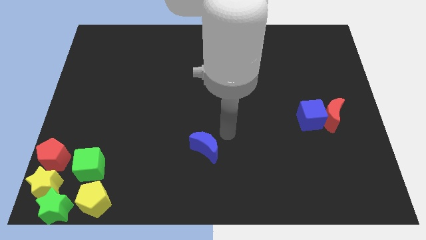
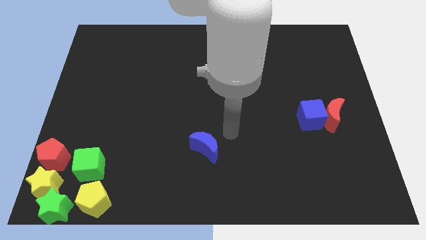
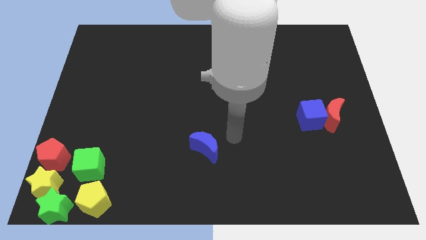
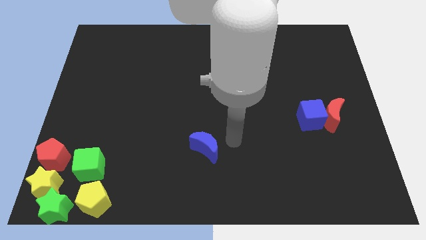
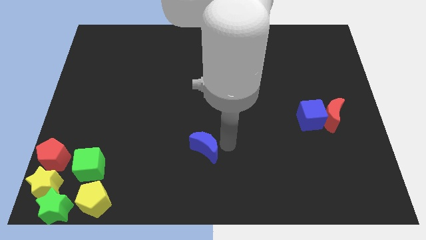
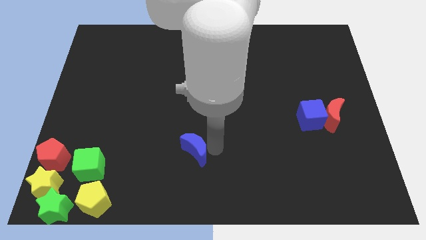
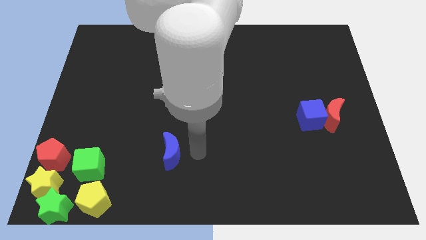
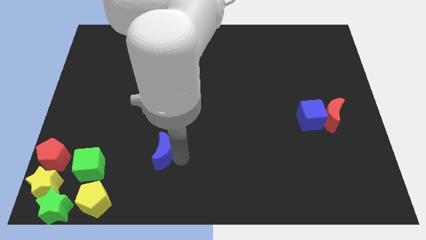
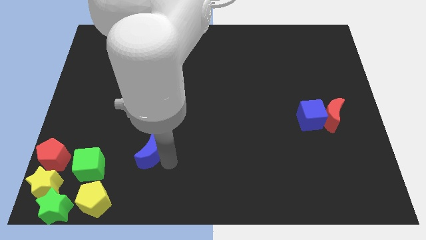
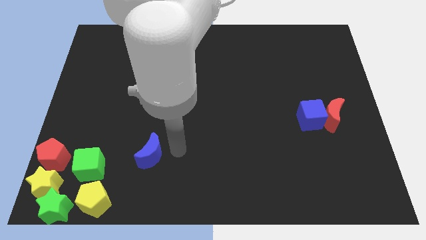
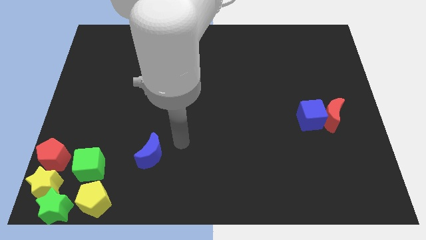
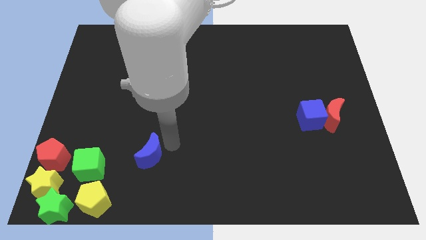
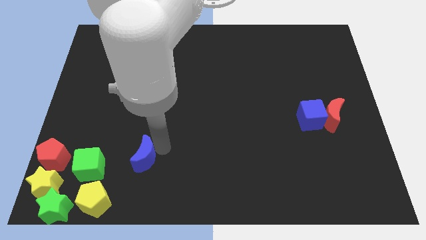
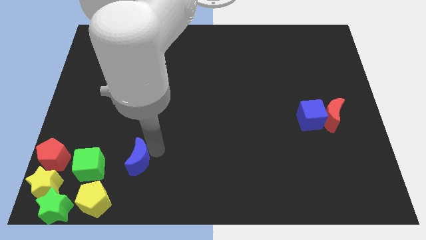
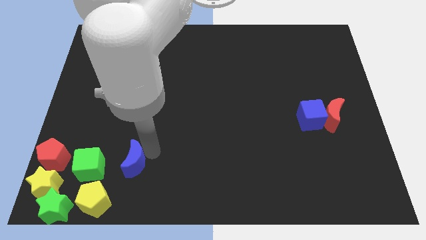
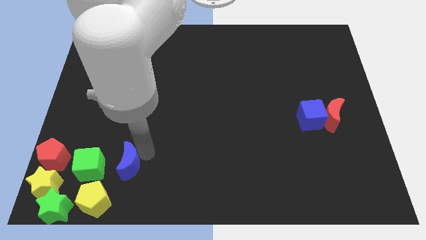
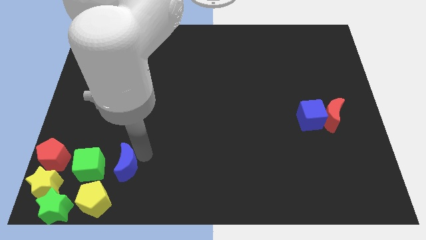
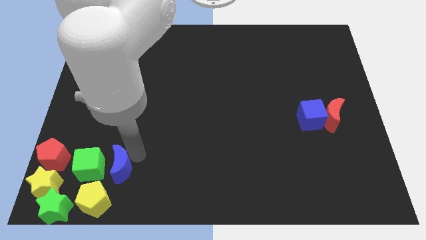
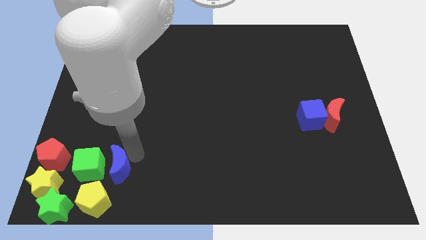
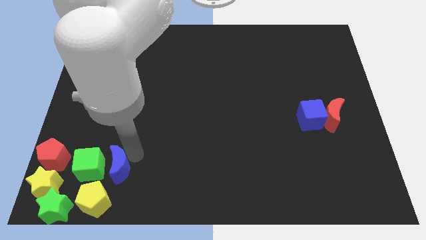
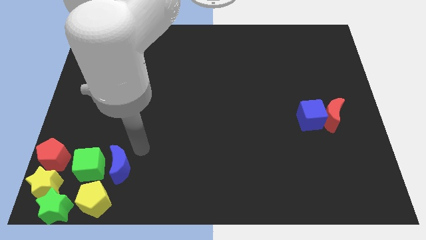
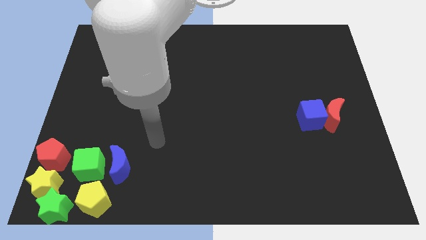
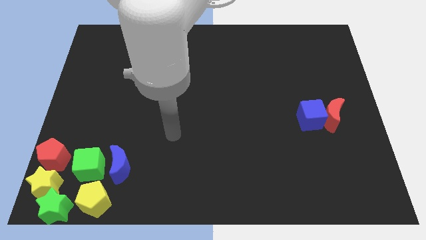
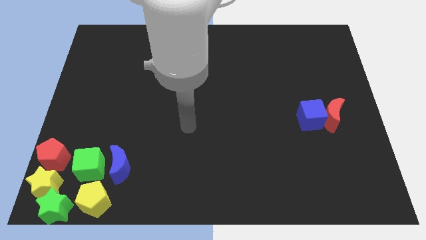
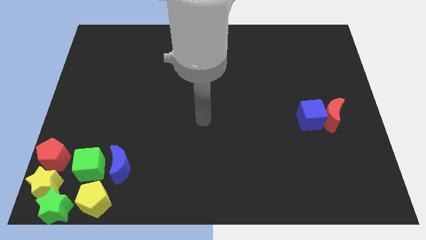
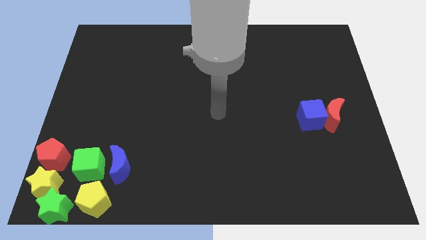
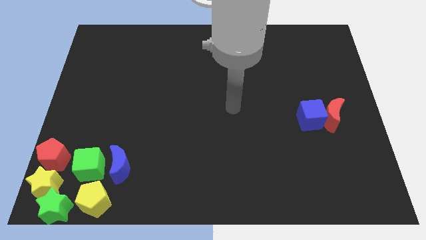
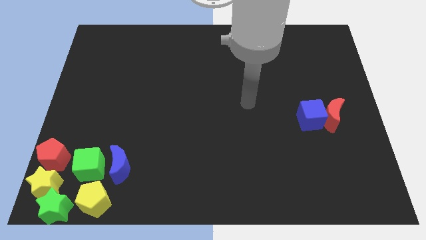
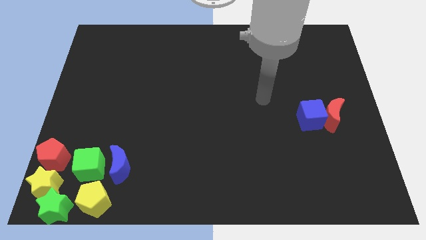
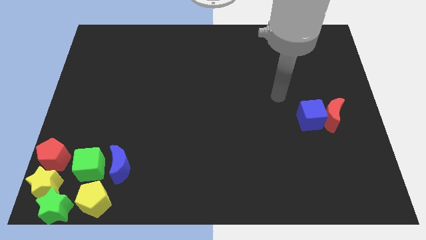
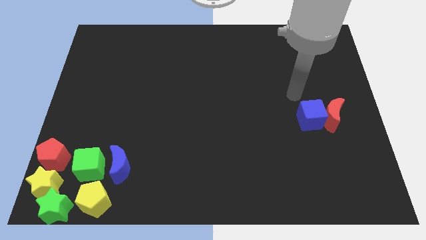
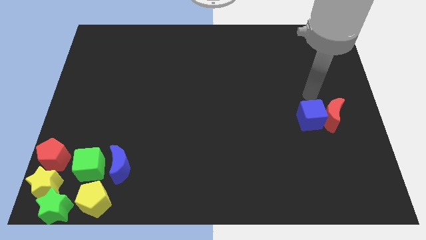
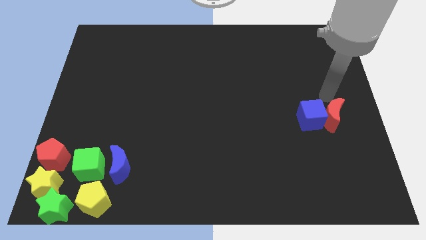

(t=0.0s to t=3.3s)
put the blue crescent to the right side of the green cube

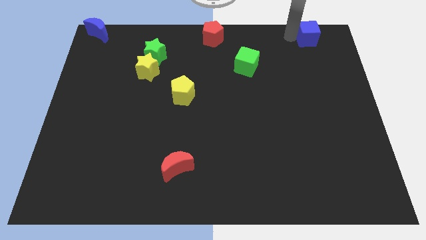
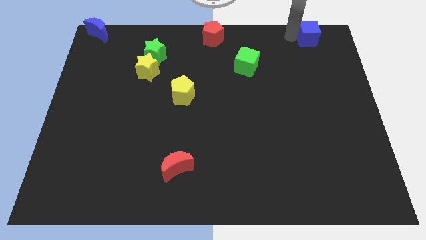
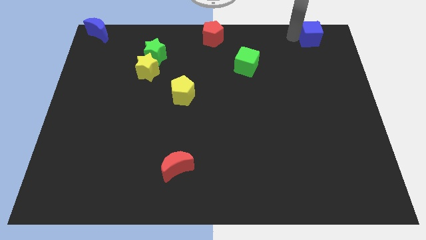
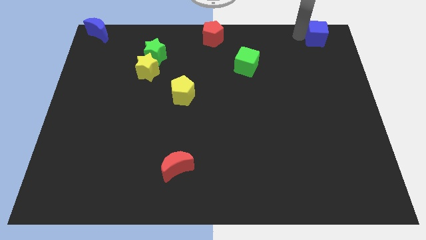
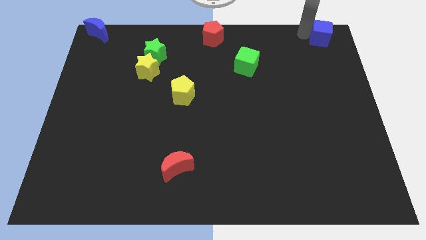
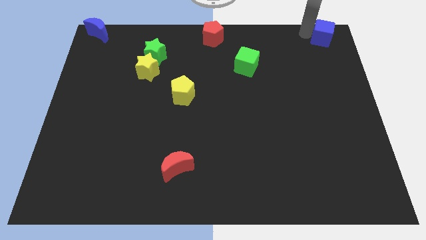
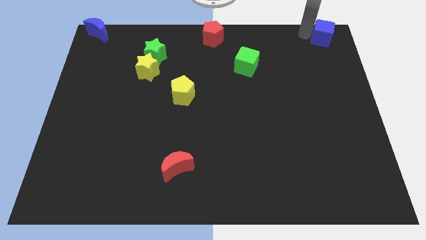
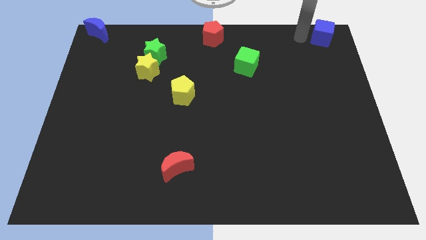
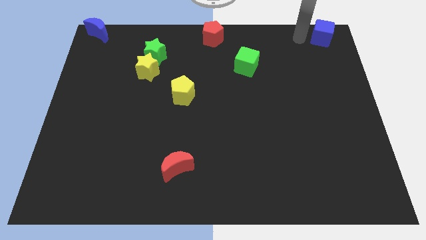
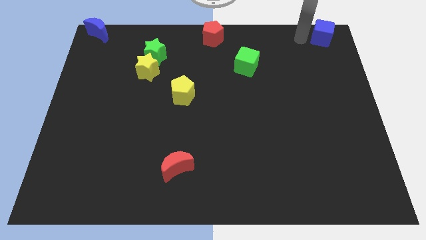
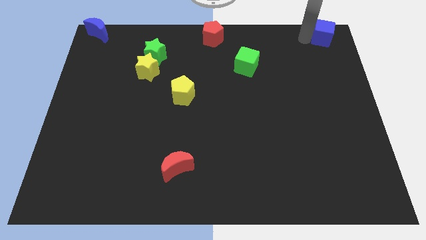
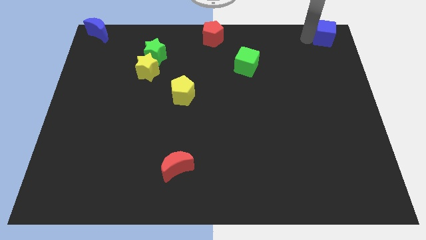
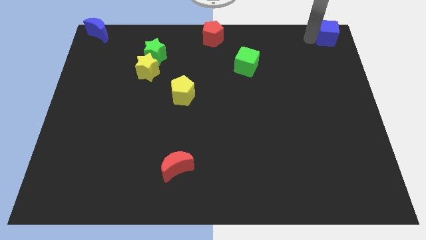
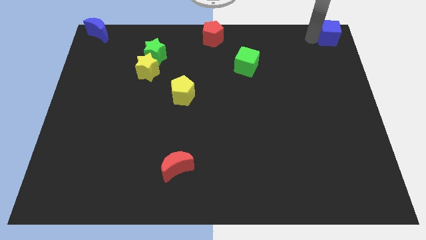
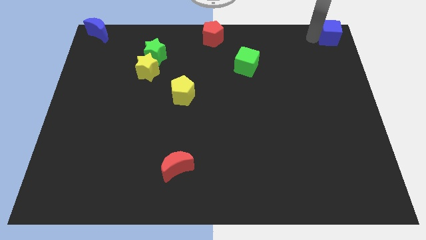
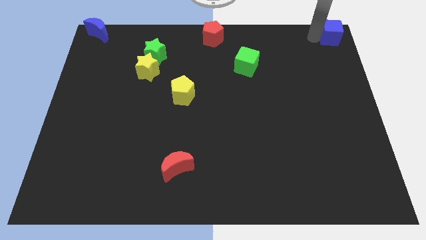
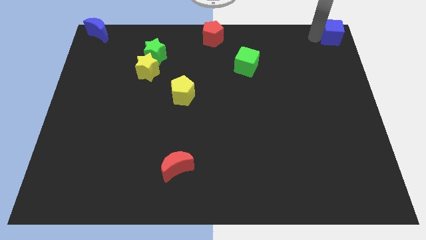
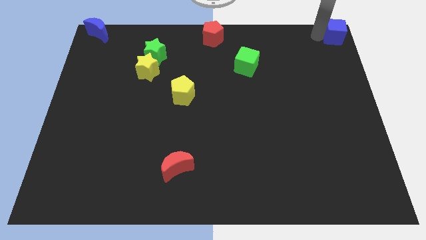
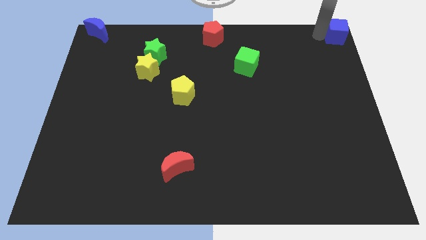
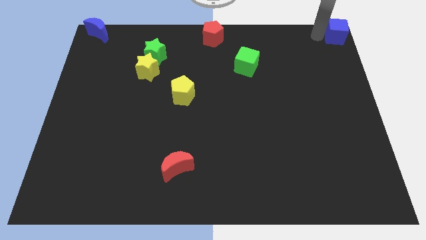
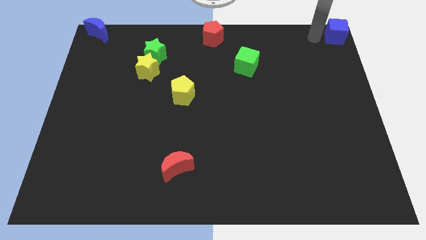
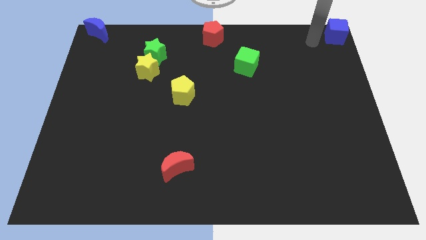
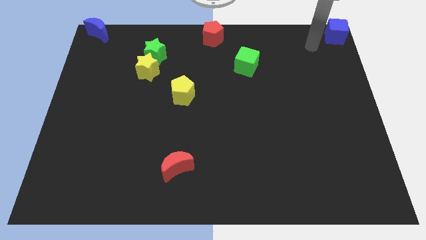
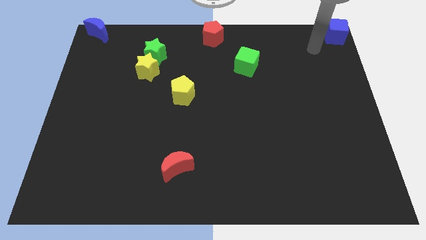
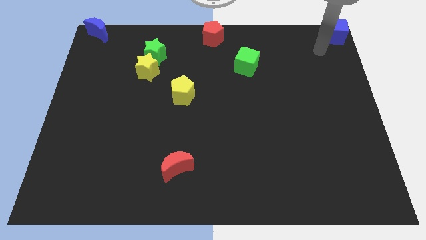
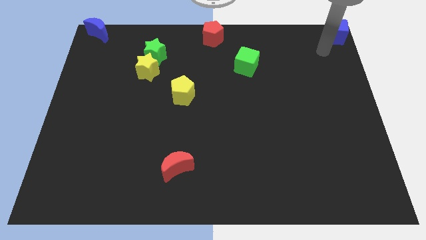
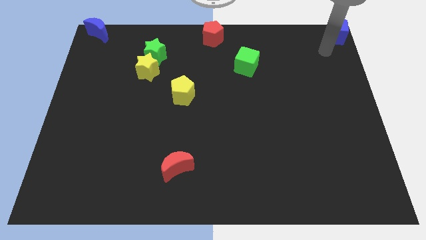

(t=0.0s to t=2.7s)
place the blue cube to top right corner of the board

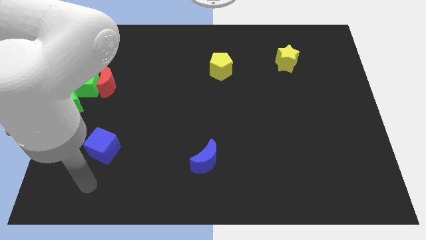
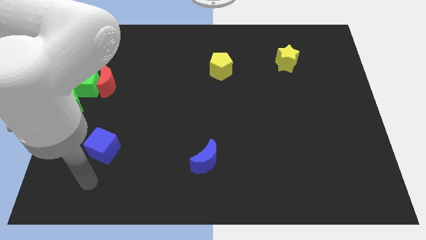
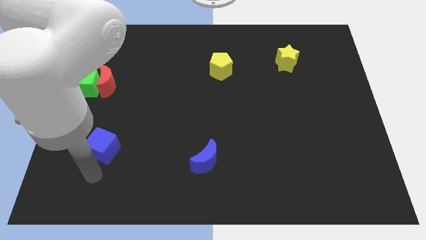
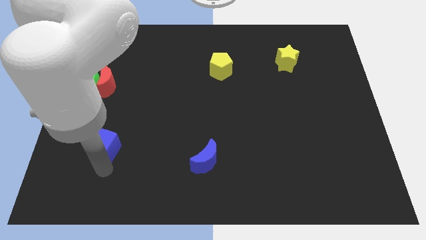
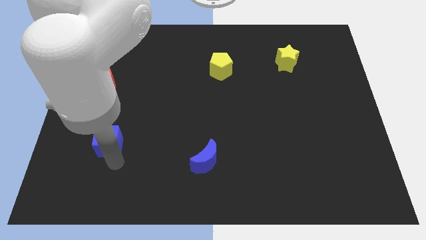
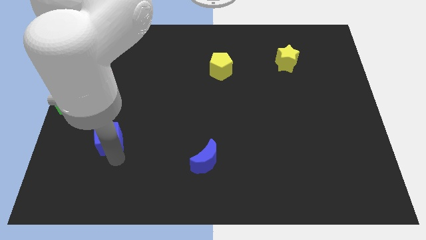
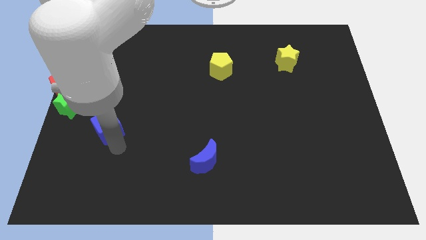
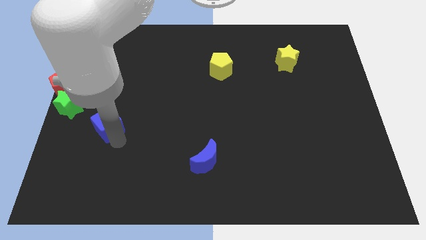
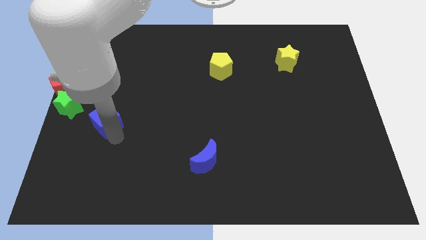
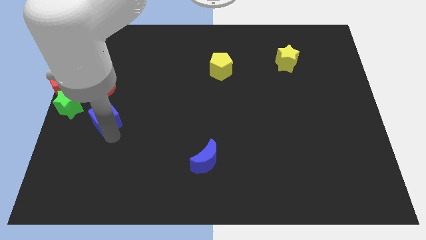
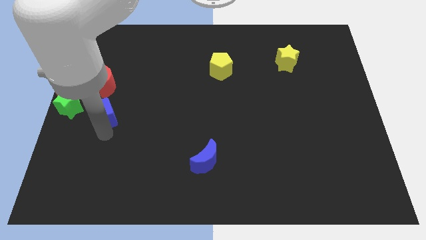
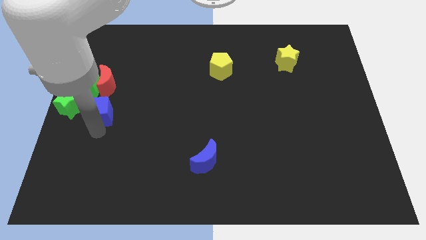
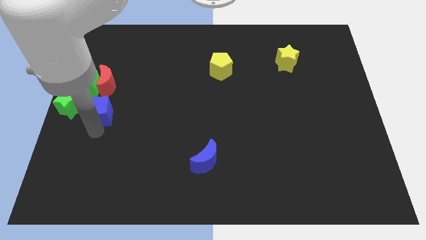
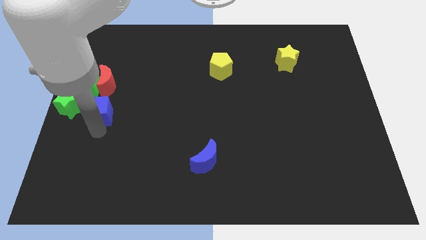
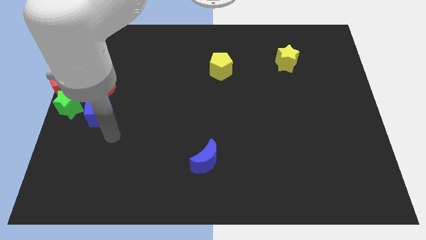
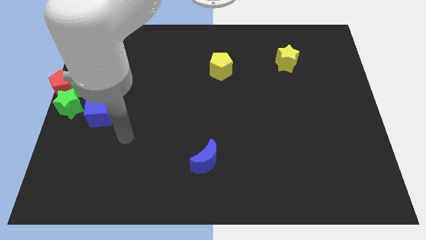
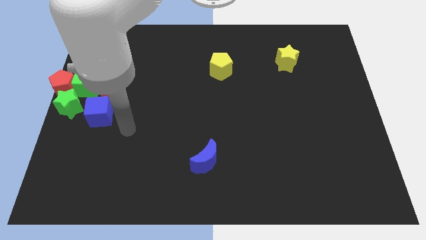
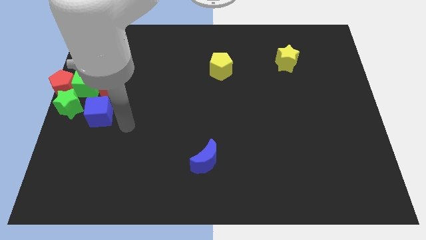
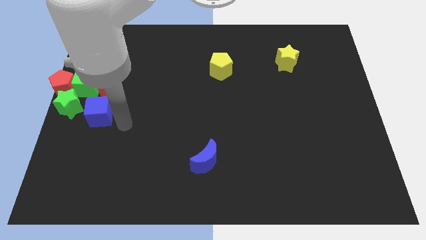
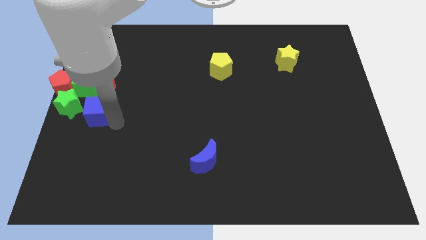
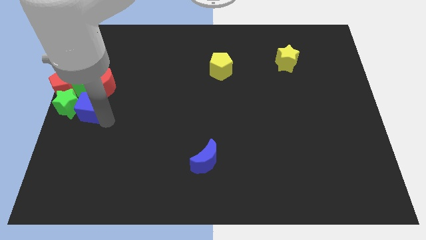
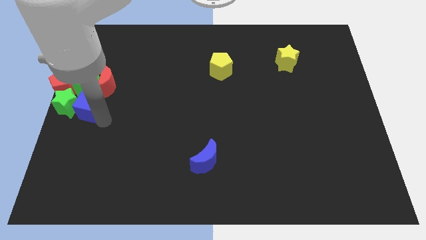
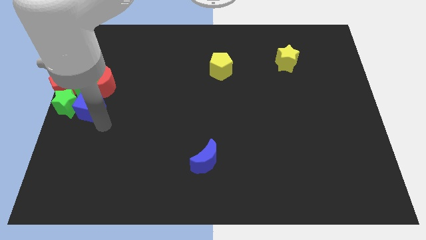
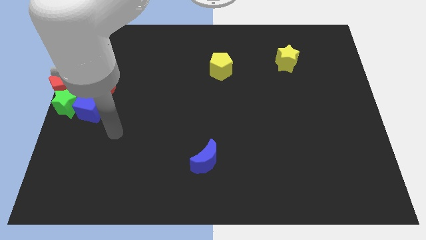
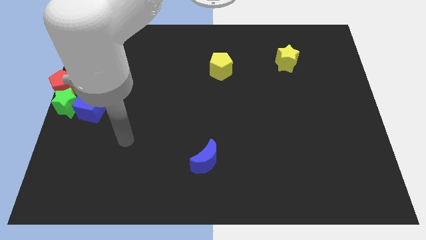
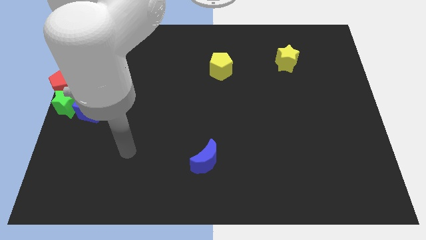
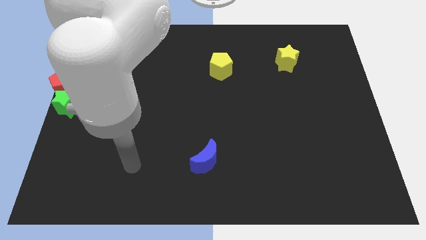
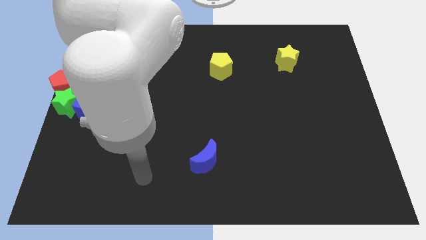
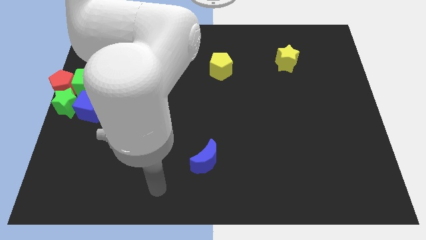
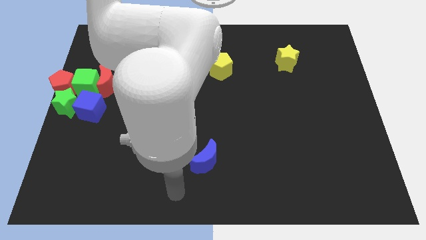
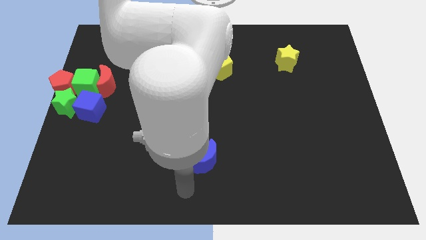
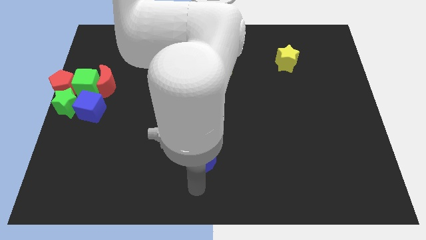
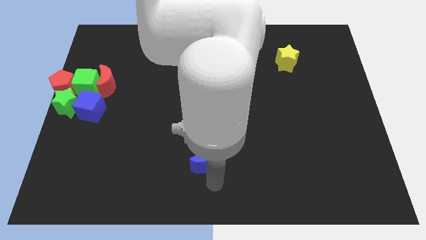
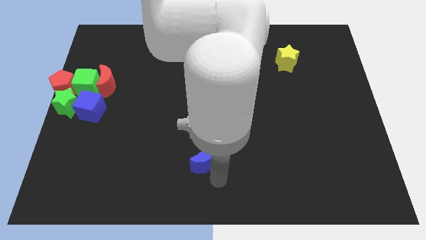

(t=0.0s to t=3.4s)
add the blue cube to the group of blocks at the left center of the board
